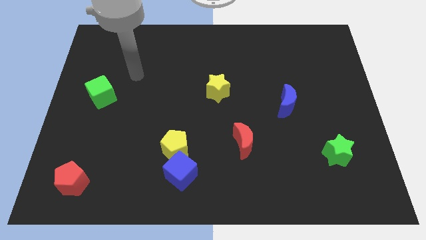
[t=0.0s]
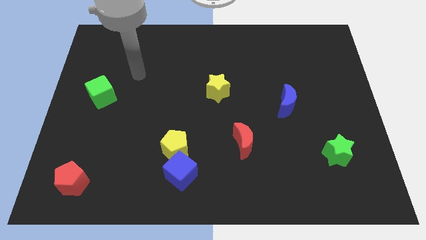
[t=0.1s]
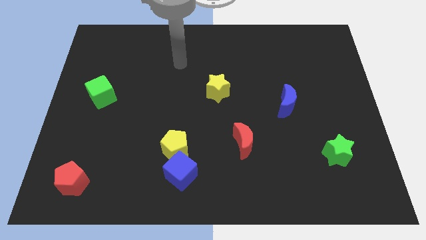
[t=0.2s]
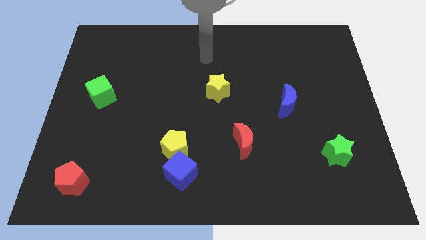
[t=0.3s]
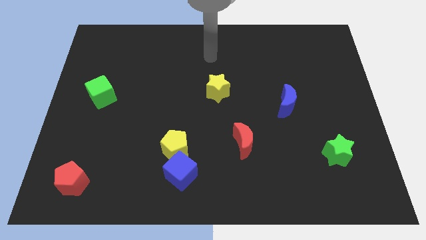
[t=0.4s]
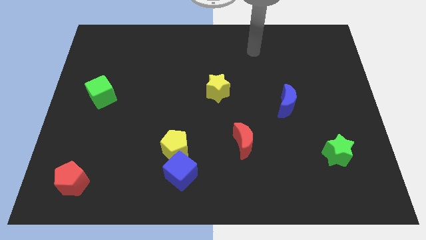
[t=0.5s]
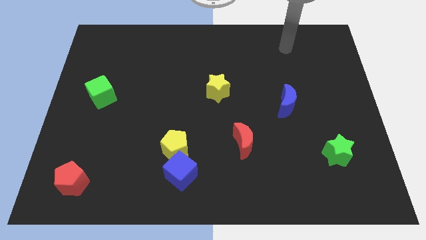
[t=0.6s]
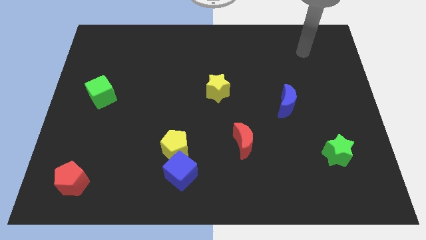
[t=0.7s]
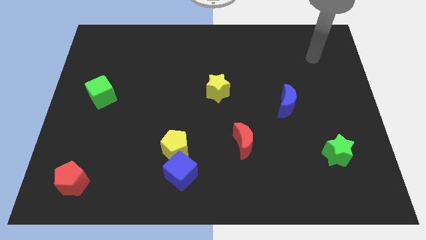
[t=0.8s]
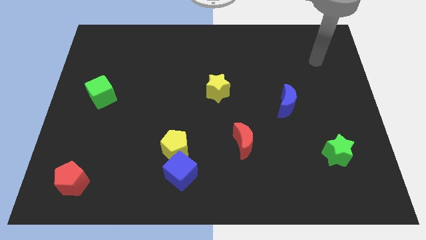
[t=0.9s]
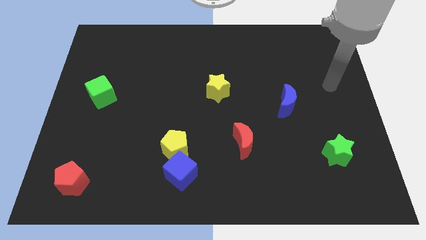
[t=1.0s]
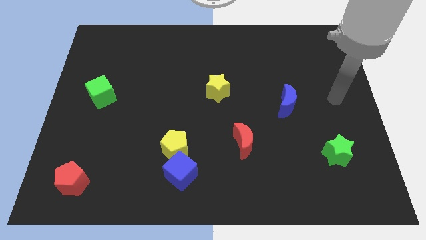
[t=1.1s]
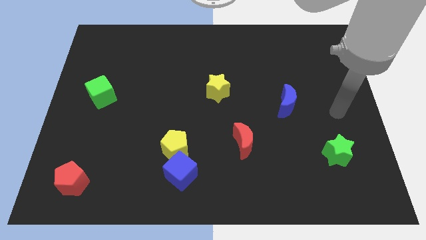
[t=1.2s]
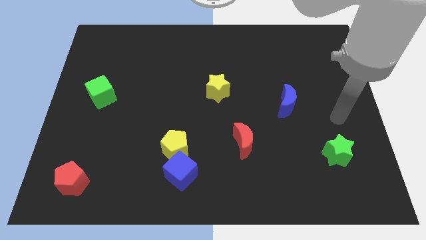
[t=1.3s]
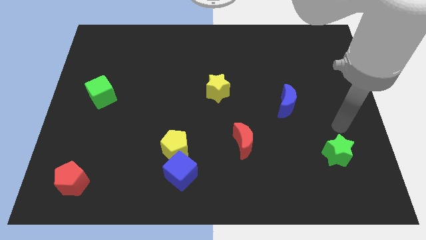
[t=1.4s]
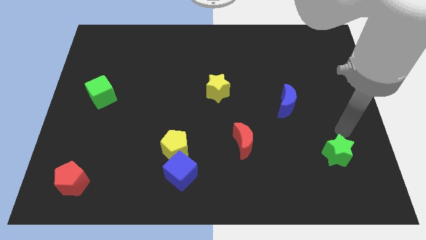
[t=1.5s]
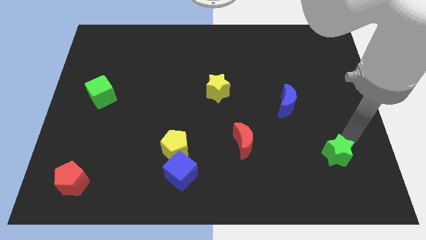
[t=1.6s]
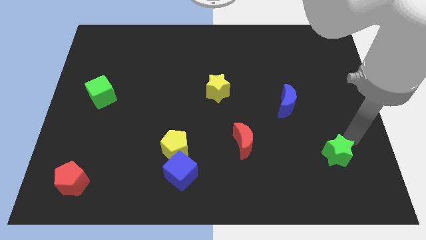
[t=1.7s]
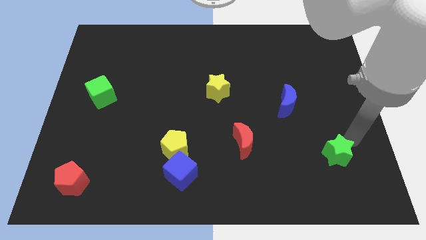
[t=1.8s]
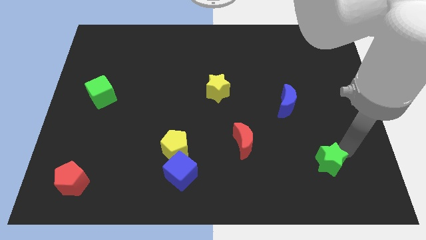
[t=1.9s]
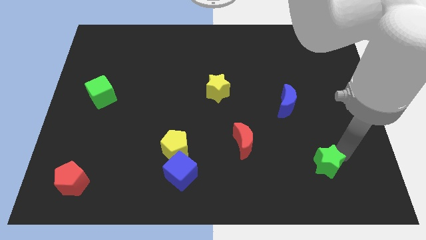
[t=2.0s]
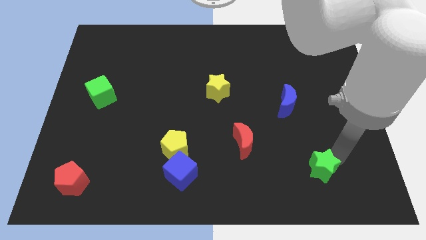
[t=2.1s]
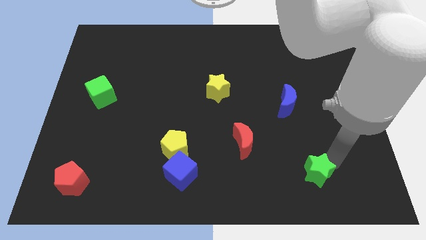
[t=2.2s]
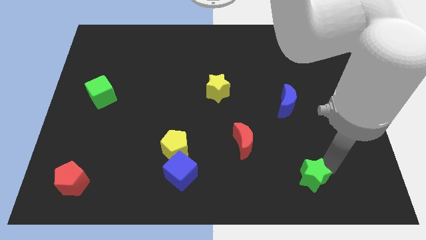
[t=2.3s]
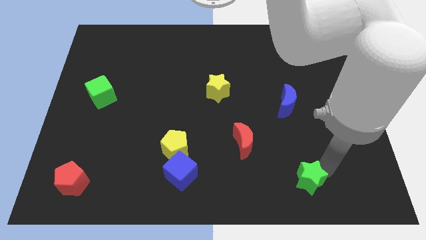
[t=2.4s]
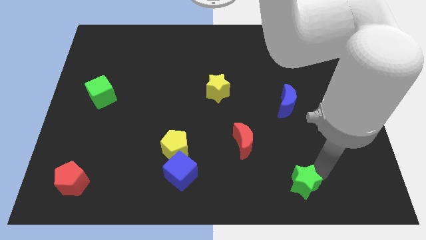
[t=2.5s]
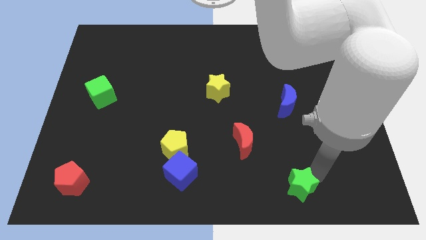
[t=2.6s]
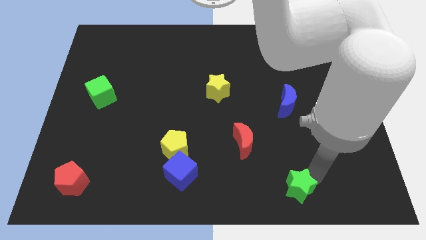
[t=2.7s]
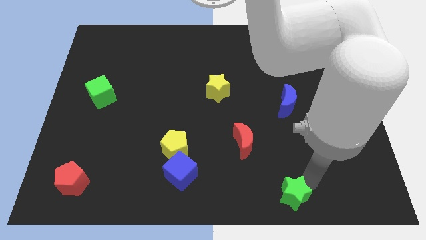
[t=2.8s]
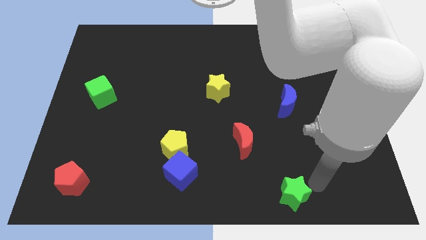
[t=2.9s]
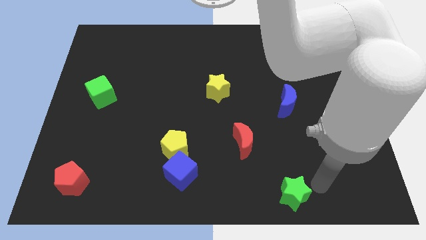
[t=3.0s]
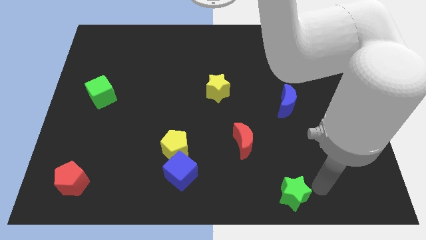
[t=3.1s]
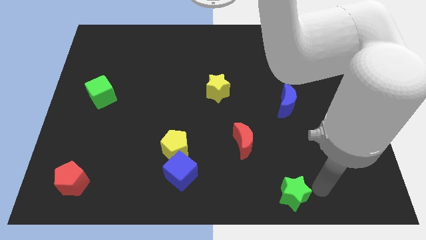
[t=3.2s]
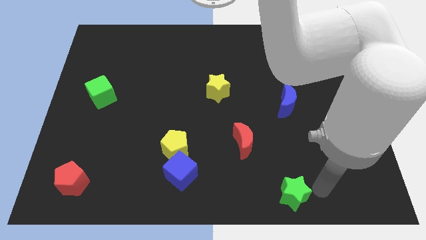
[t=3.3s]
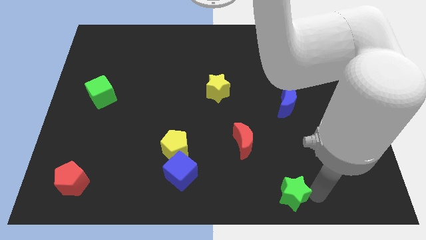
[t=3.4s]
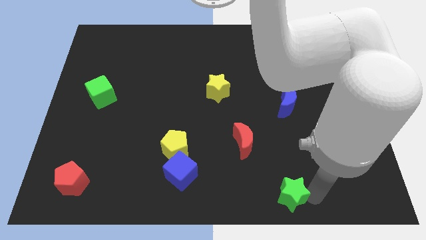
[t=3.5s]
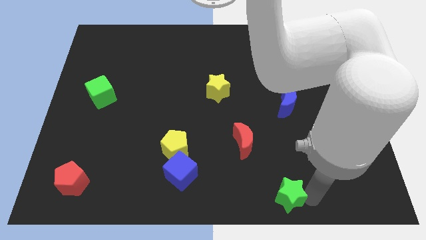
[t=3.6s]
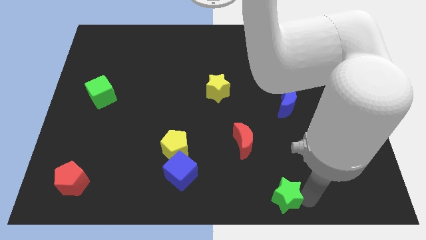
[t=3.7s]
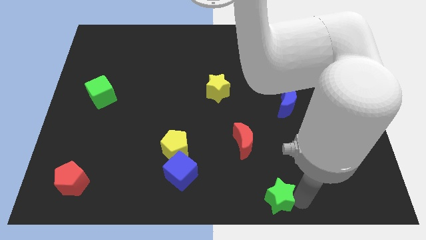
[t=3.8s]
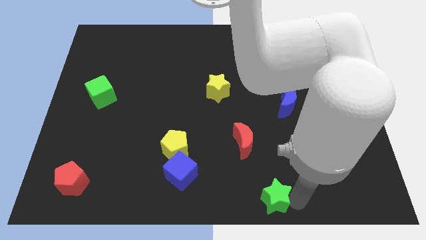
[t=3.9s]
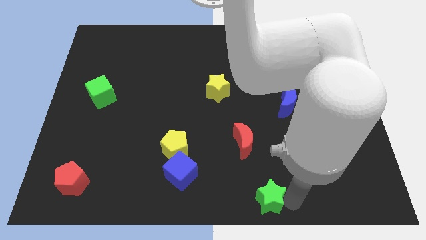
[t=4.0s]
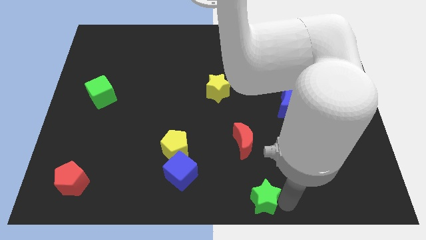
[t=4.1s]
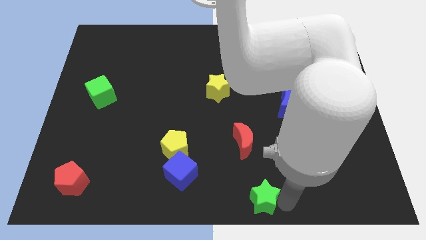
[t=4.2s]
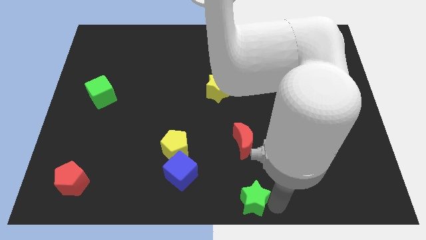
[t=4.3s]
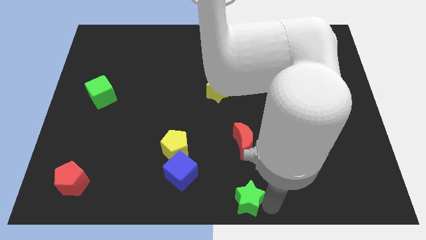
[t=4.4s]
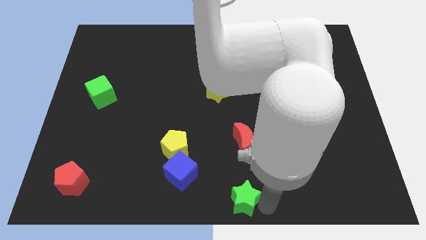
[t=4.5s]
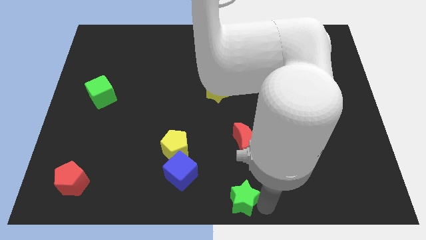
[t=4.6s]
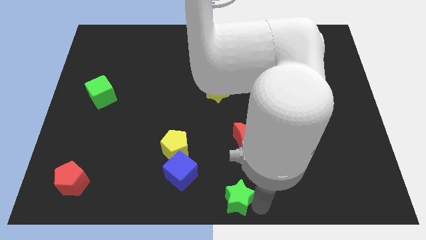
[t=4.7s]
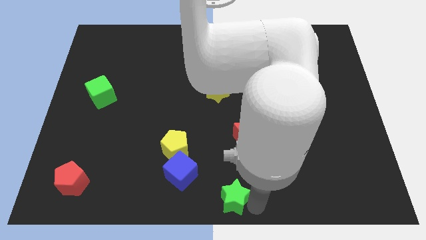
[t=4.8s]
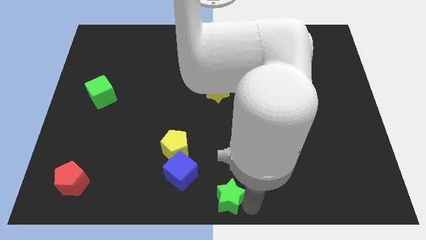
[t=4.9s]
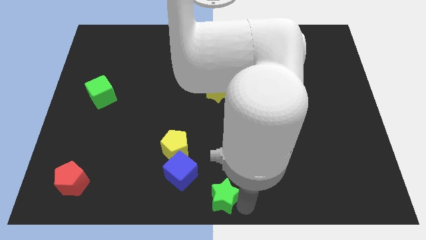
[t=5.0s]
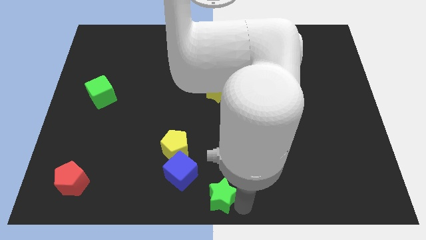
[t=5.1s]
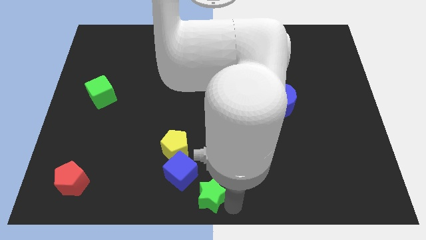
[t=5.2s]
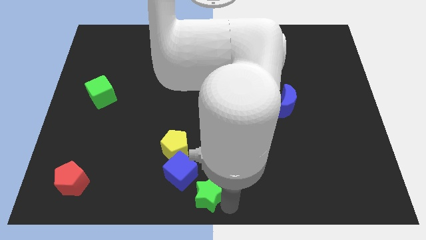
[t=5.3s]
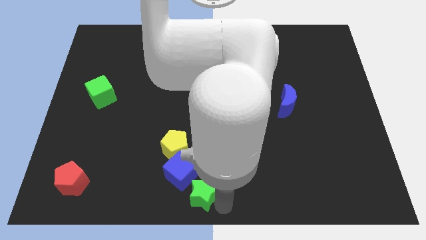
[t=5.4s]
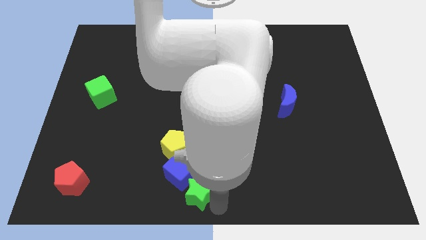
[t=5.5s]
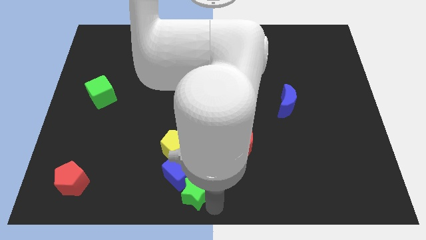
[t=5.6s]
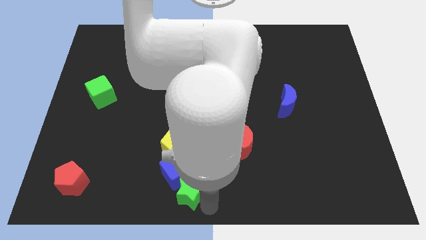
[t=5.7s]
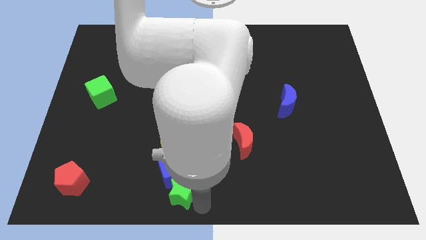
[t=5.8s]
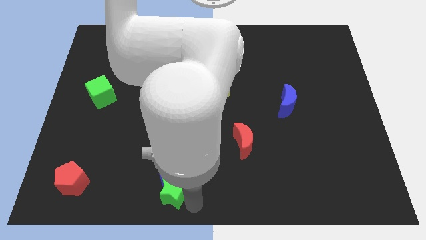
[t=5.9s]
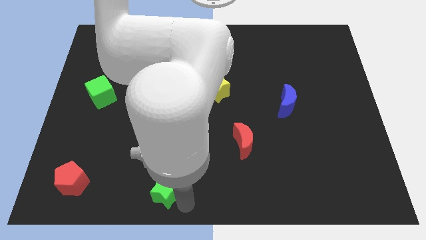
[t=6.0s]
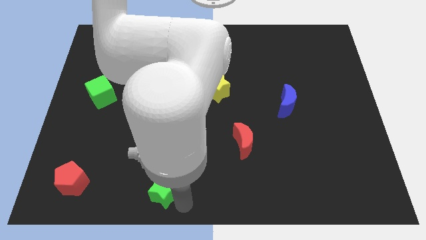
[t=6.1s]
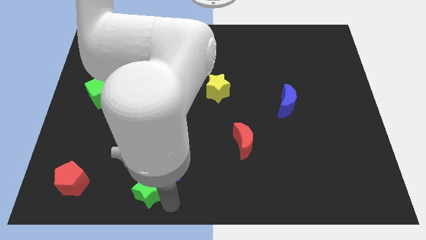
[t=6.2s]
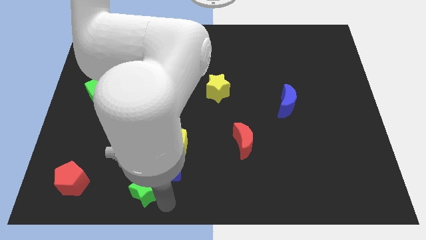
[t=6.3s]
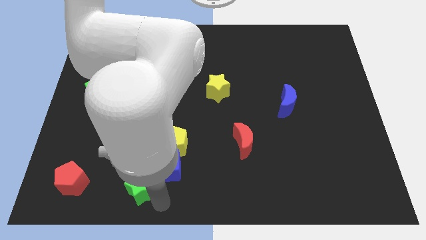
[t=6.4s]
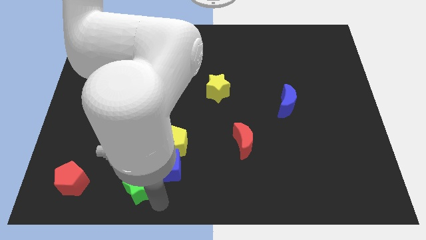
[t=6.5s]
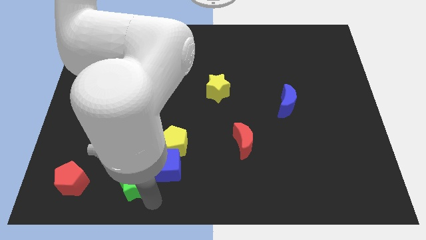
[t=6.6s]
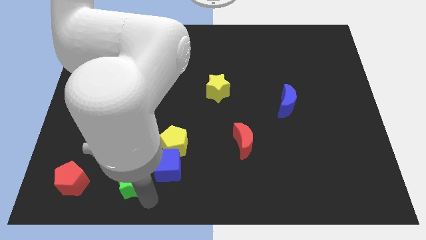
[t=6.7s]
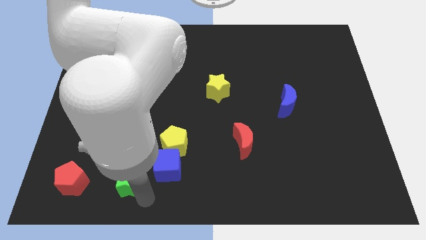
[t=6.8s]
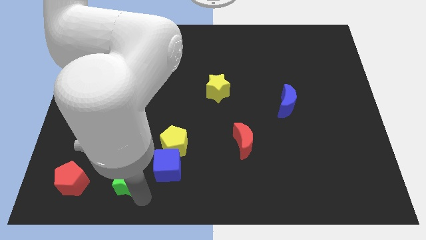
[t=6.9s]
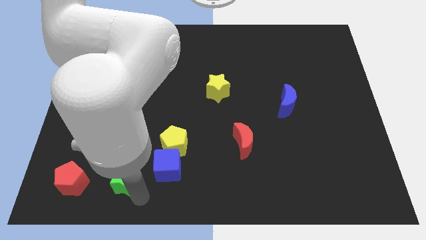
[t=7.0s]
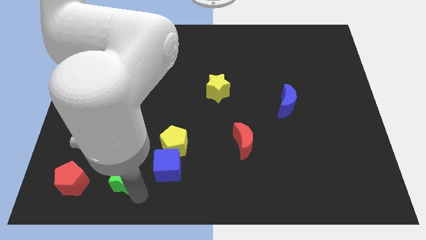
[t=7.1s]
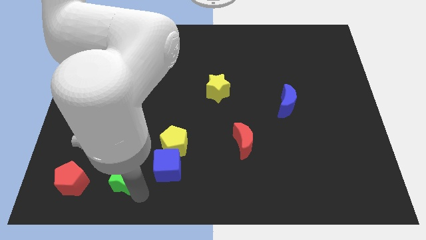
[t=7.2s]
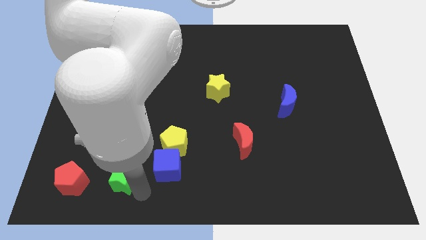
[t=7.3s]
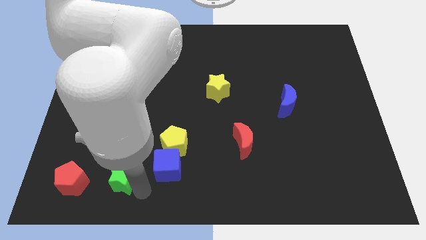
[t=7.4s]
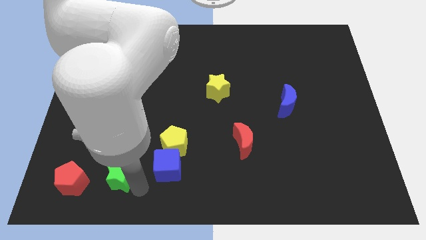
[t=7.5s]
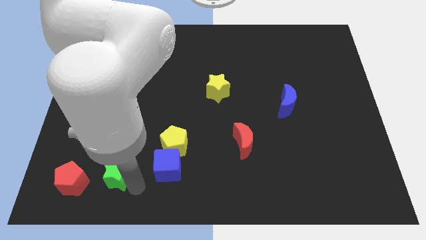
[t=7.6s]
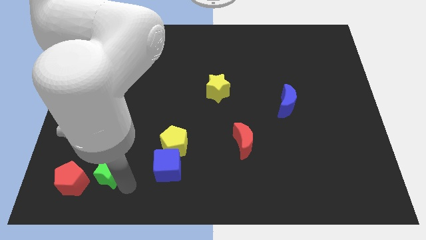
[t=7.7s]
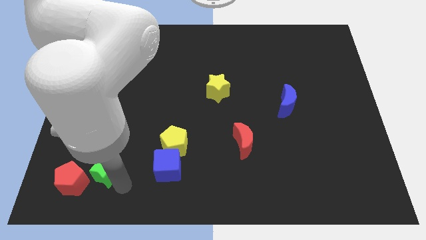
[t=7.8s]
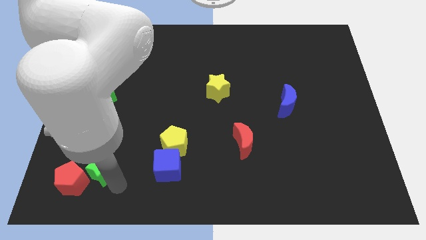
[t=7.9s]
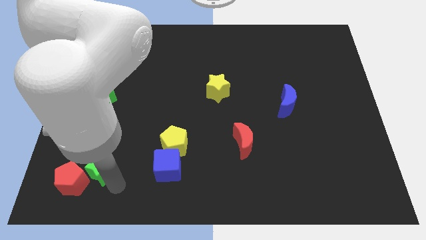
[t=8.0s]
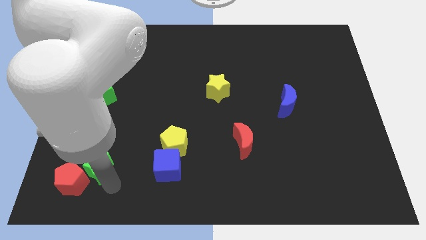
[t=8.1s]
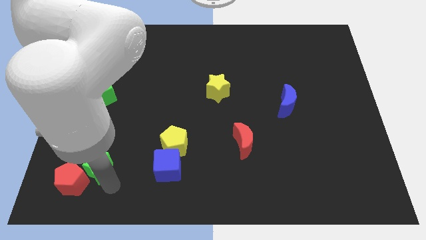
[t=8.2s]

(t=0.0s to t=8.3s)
slide the green star to the red pentagon

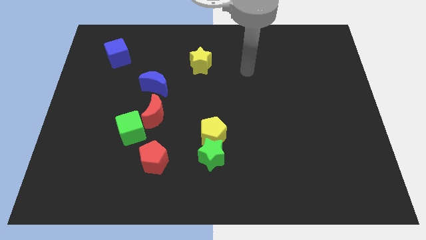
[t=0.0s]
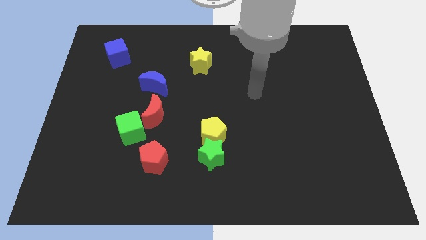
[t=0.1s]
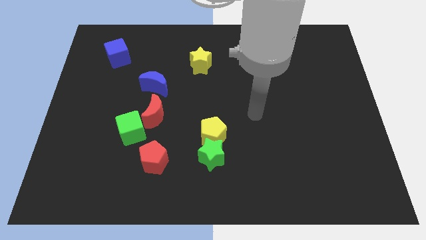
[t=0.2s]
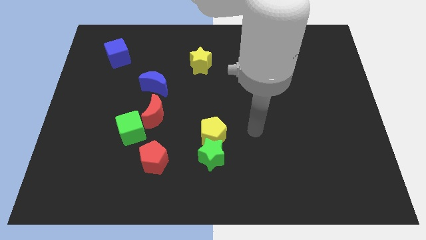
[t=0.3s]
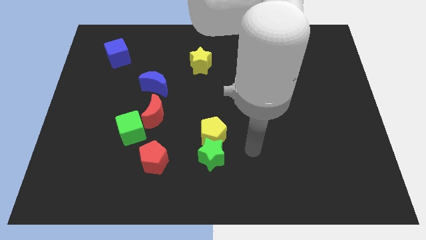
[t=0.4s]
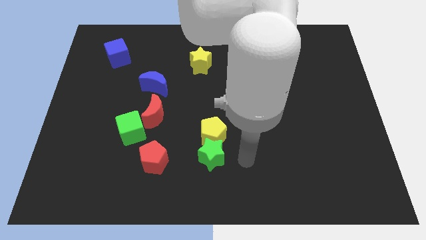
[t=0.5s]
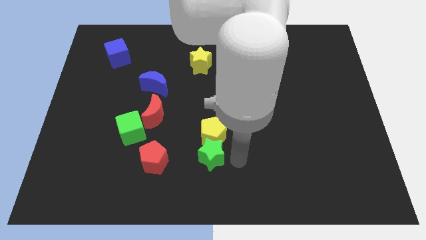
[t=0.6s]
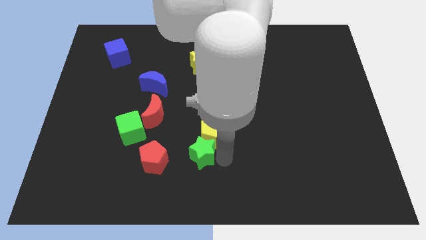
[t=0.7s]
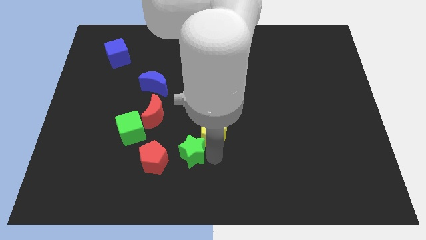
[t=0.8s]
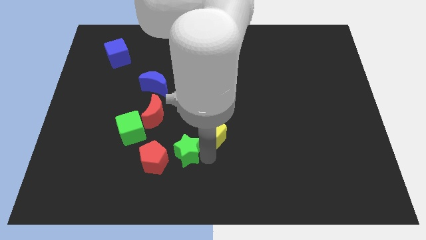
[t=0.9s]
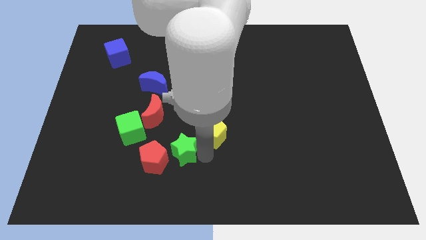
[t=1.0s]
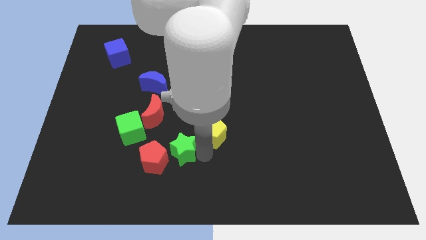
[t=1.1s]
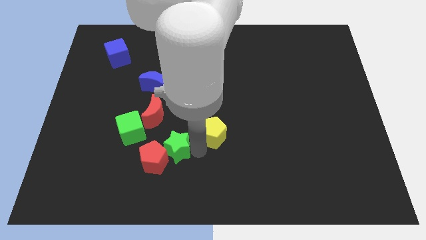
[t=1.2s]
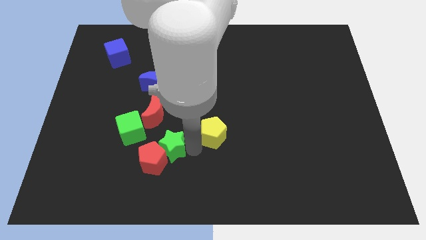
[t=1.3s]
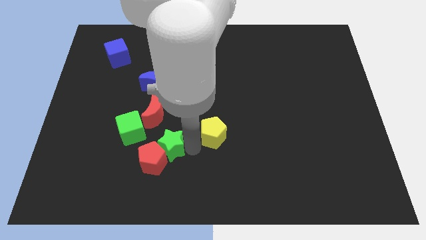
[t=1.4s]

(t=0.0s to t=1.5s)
put the green star towards the red pentagon
